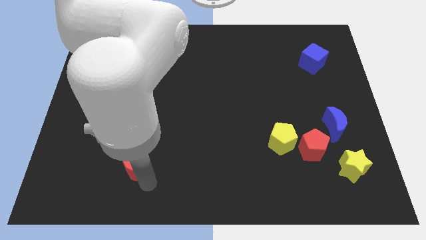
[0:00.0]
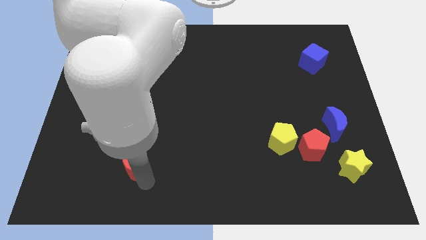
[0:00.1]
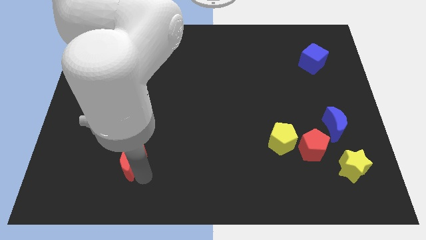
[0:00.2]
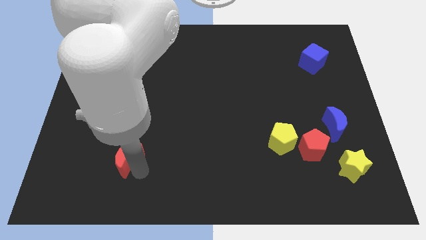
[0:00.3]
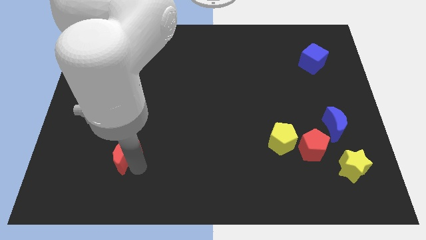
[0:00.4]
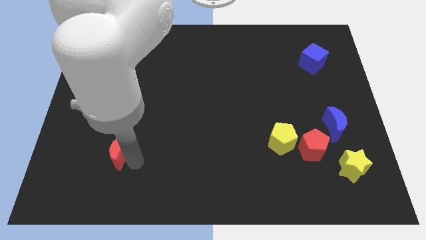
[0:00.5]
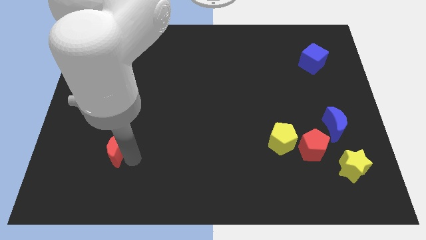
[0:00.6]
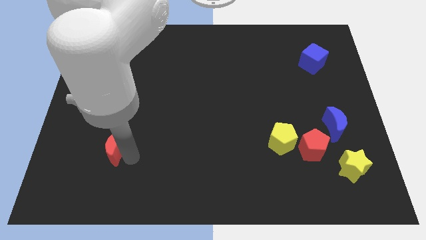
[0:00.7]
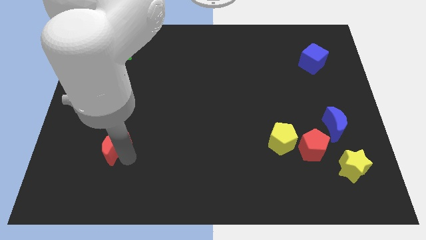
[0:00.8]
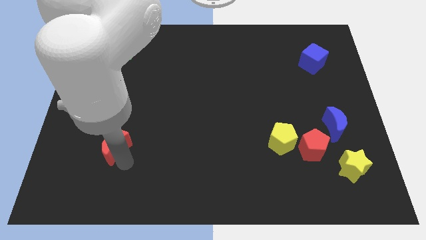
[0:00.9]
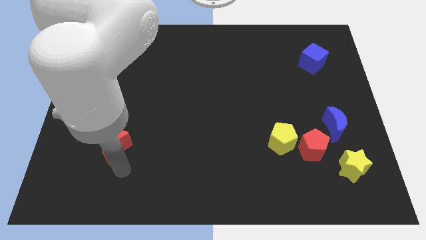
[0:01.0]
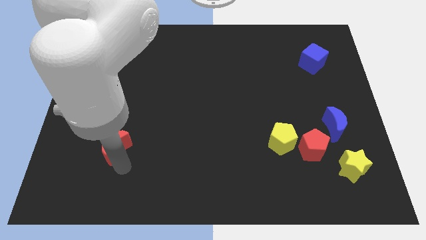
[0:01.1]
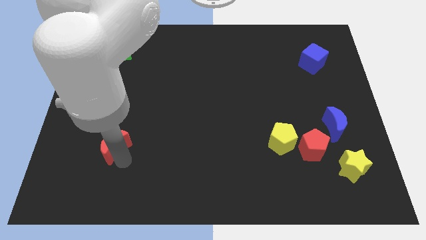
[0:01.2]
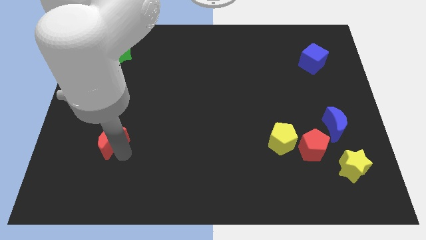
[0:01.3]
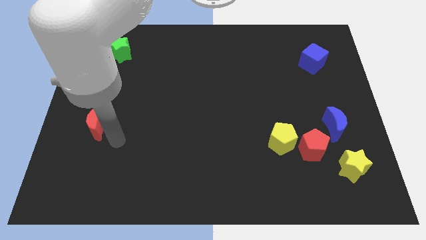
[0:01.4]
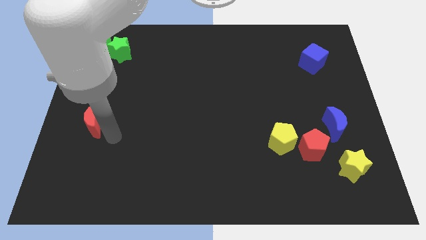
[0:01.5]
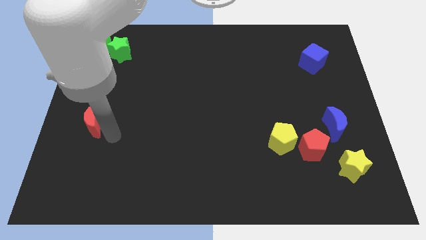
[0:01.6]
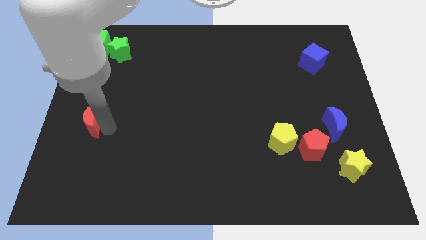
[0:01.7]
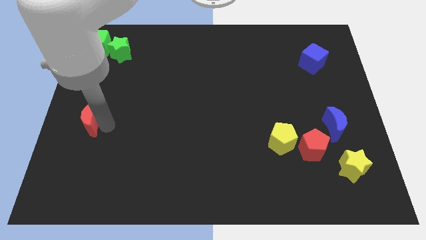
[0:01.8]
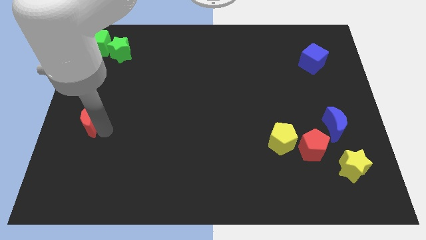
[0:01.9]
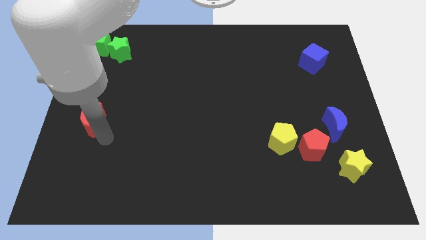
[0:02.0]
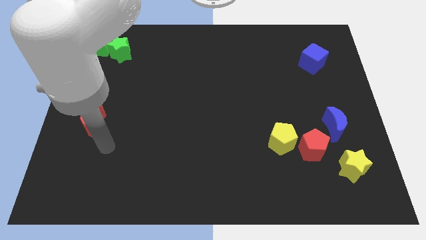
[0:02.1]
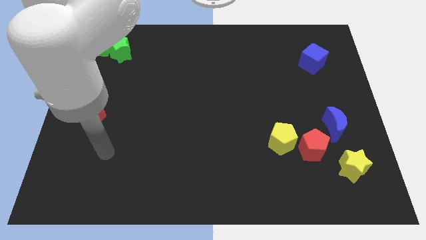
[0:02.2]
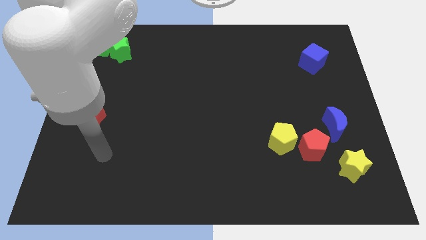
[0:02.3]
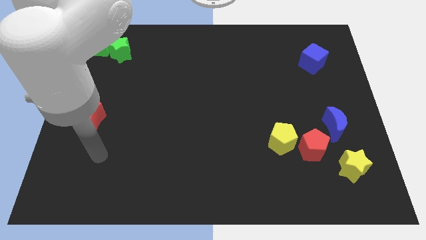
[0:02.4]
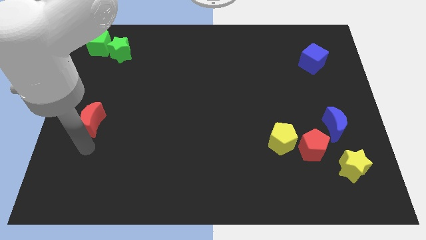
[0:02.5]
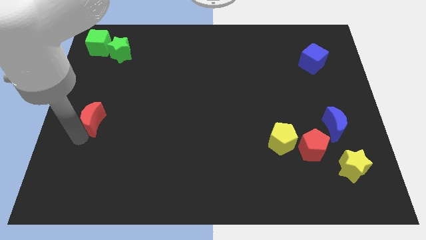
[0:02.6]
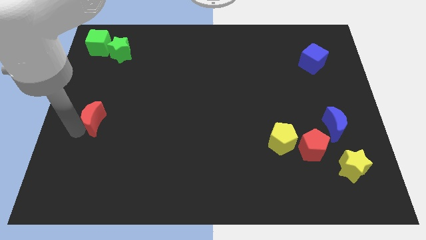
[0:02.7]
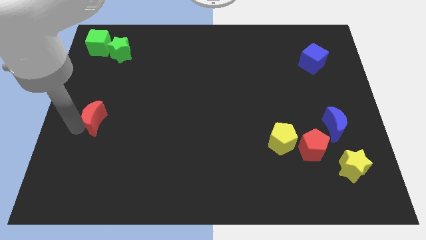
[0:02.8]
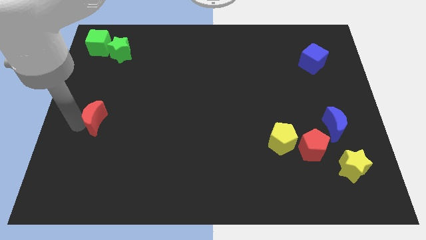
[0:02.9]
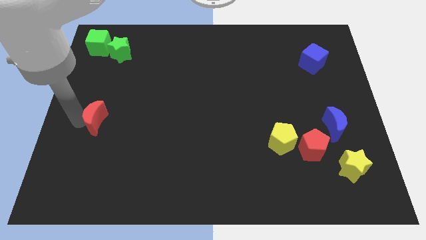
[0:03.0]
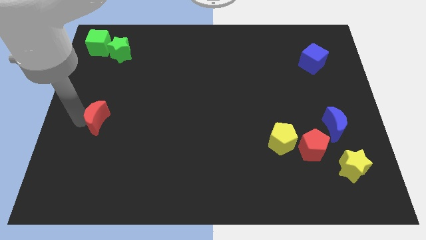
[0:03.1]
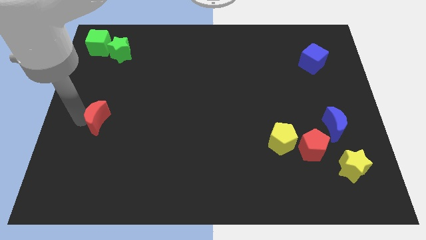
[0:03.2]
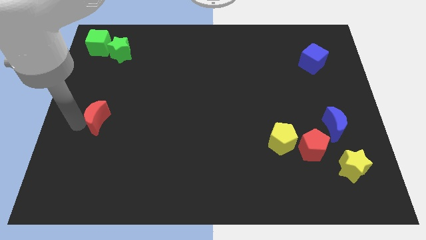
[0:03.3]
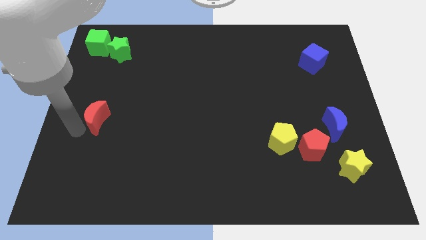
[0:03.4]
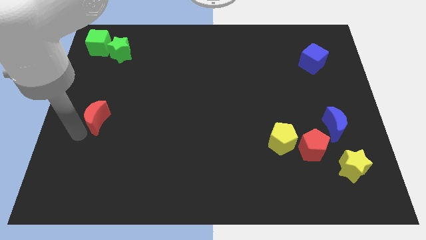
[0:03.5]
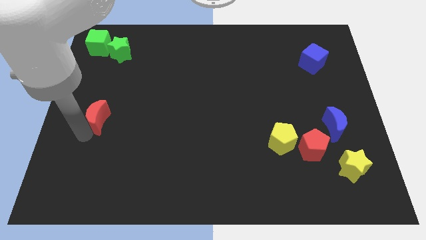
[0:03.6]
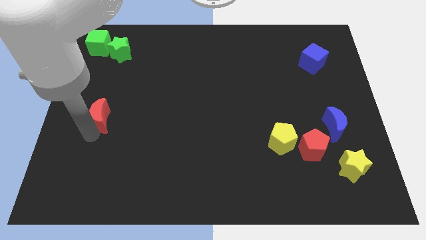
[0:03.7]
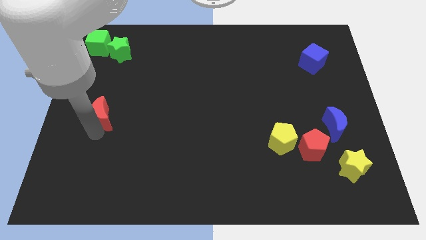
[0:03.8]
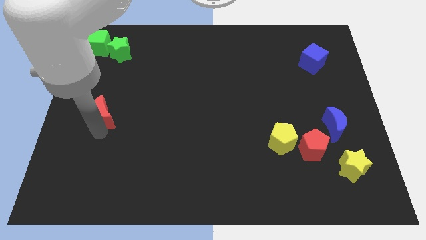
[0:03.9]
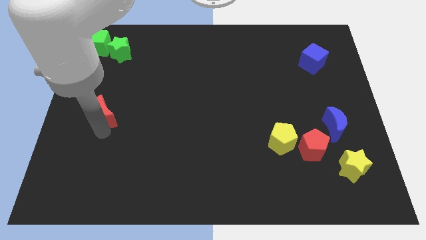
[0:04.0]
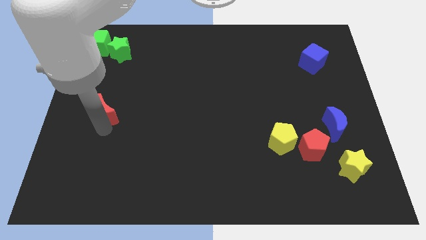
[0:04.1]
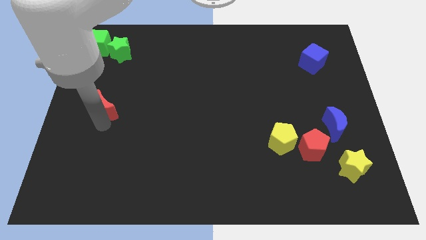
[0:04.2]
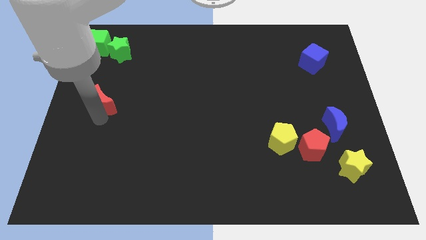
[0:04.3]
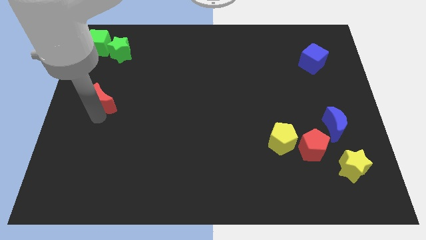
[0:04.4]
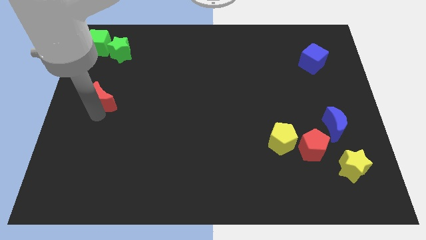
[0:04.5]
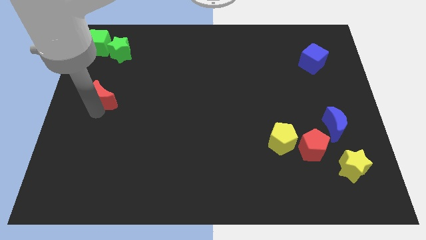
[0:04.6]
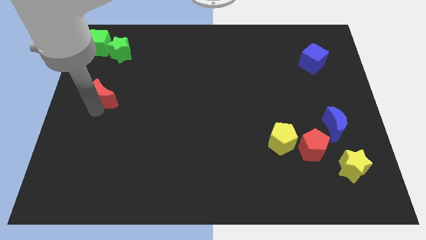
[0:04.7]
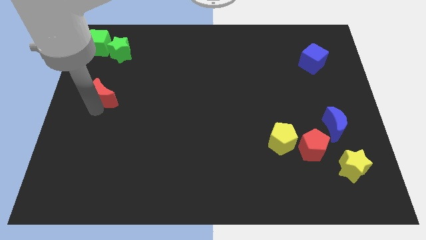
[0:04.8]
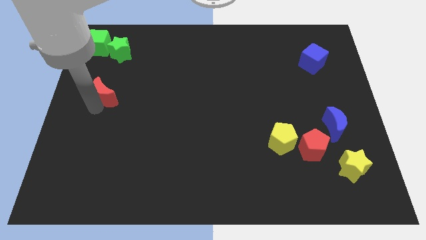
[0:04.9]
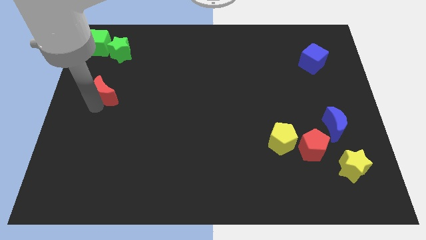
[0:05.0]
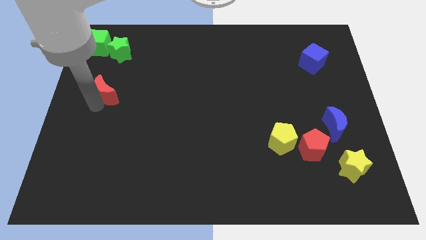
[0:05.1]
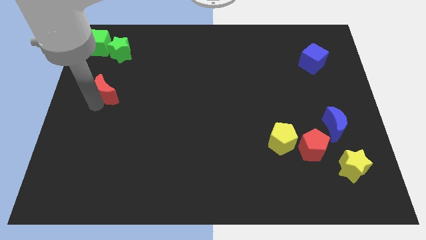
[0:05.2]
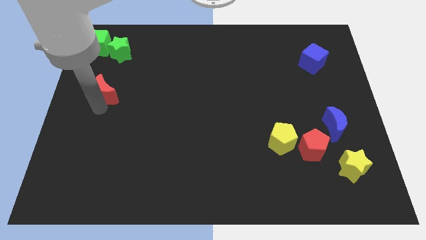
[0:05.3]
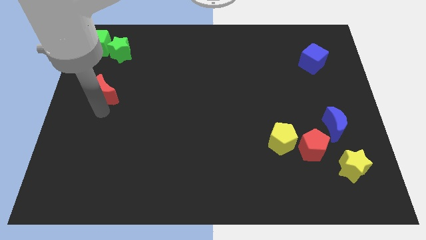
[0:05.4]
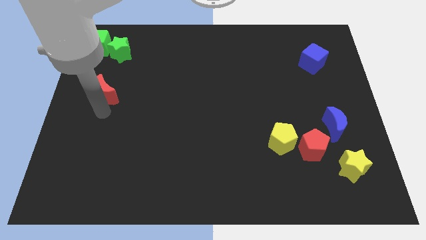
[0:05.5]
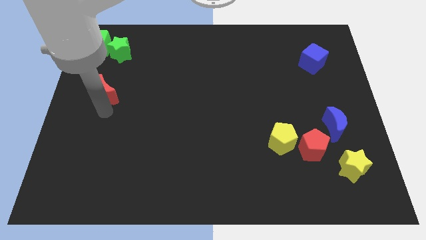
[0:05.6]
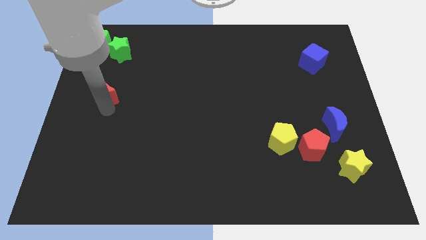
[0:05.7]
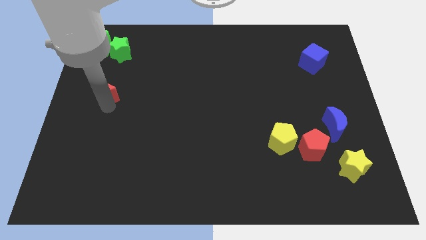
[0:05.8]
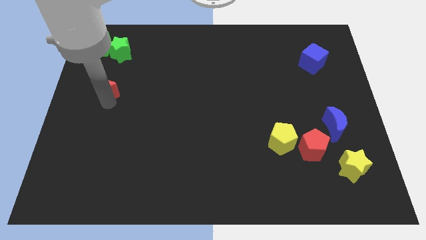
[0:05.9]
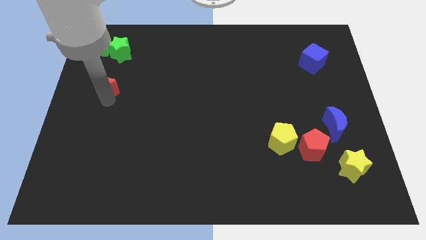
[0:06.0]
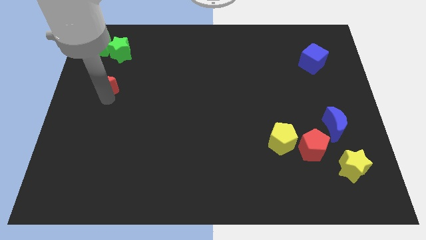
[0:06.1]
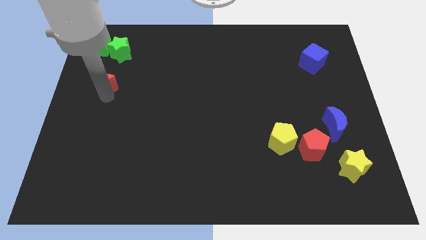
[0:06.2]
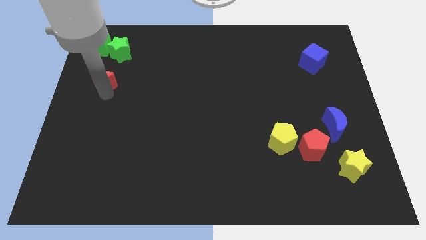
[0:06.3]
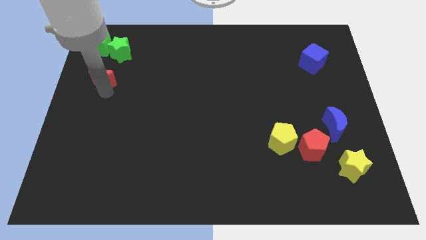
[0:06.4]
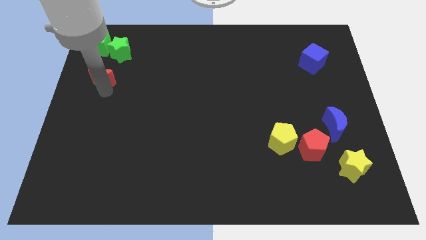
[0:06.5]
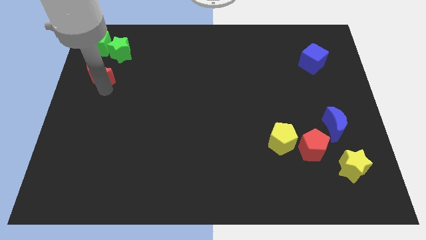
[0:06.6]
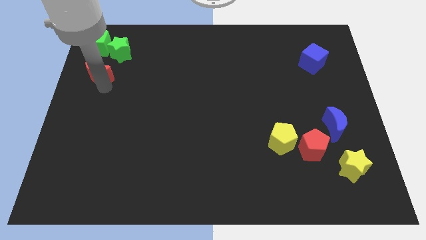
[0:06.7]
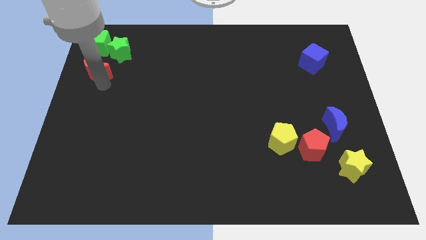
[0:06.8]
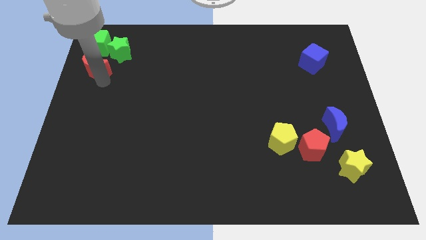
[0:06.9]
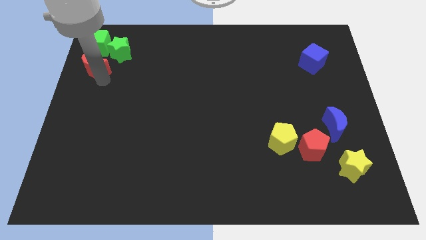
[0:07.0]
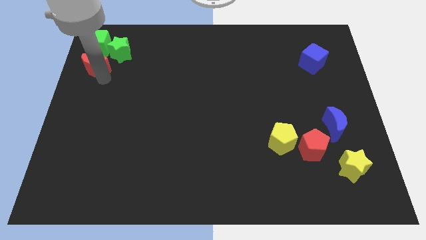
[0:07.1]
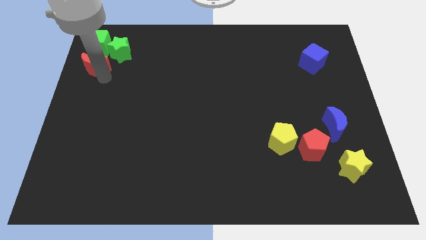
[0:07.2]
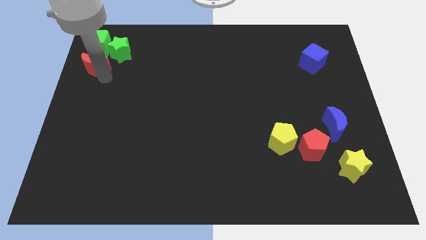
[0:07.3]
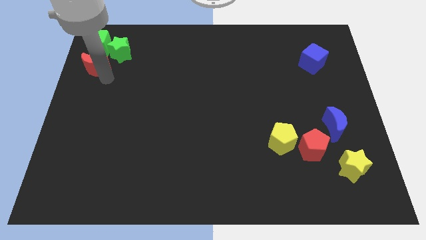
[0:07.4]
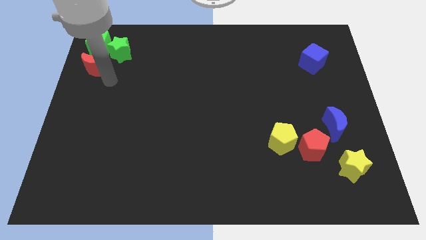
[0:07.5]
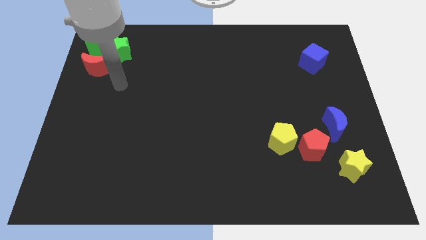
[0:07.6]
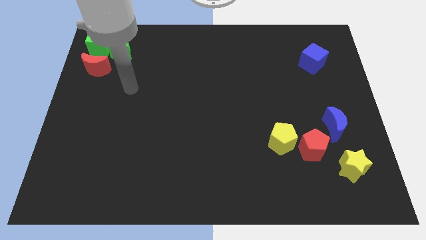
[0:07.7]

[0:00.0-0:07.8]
push the red moon below the green cube

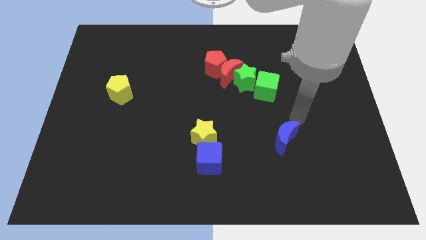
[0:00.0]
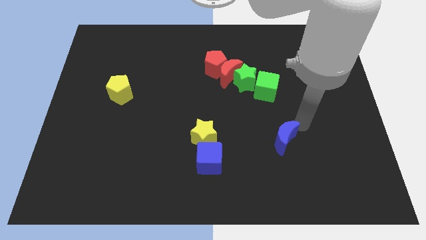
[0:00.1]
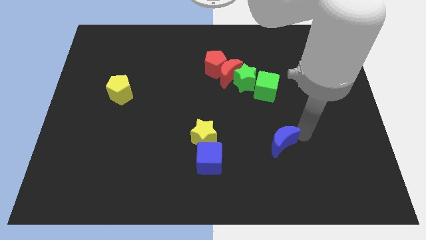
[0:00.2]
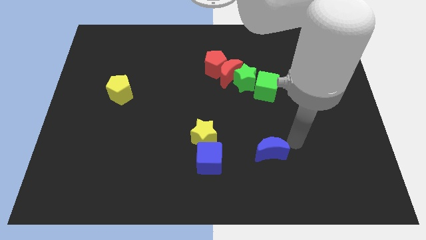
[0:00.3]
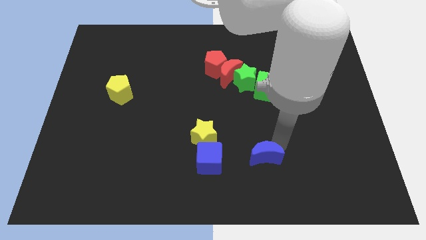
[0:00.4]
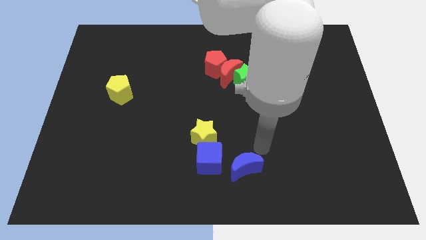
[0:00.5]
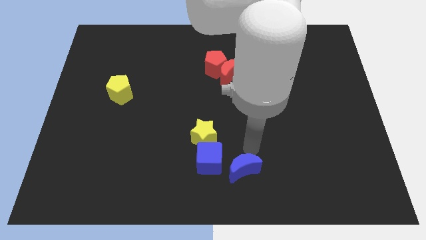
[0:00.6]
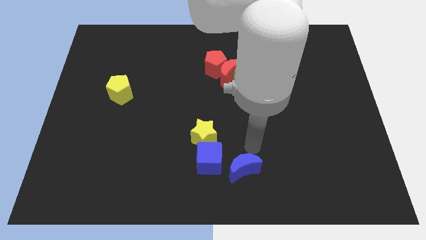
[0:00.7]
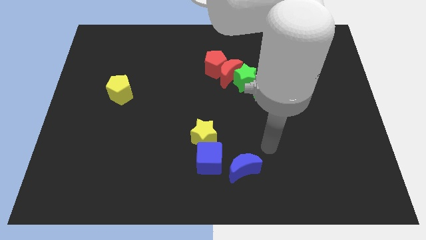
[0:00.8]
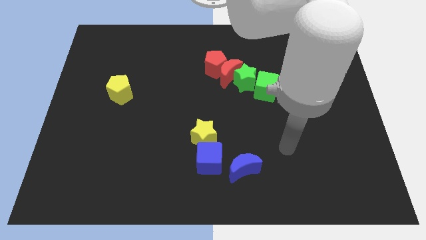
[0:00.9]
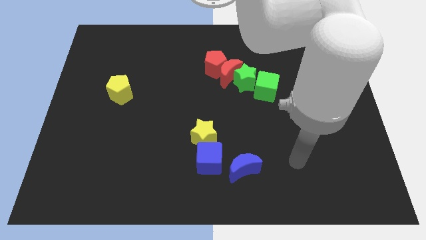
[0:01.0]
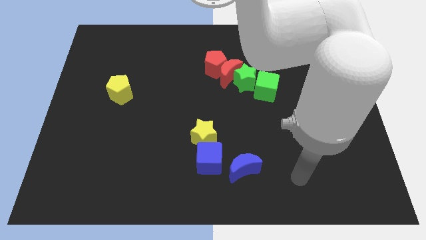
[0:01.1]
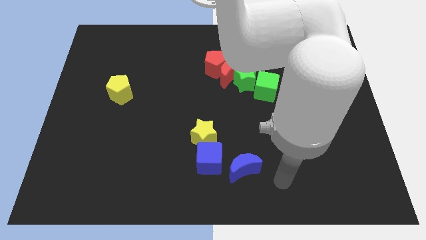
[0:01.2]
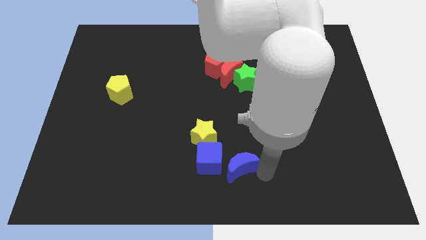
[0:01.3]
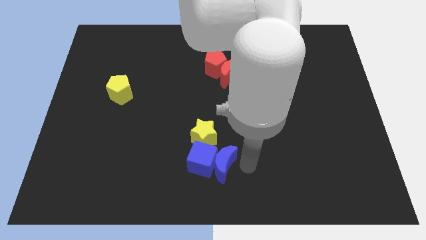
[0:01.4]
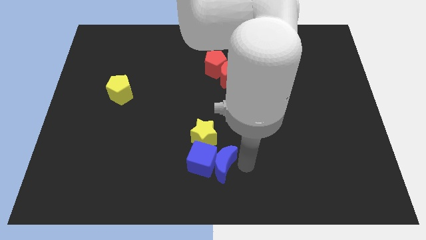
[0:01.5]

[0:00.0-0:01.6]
push the blue moon into the blue cube
